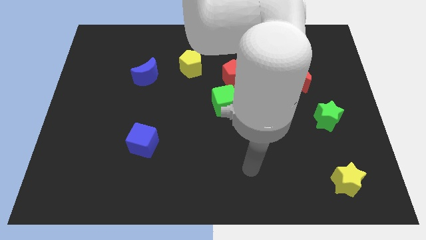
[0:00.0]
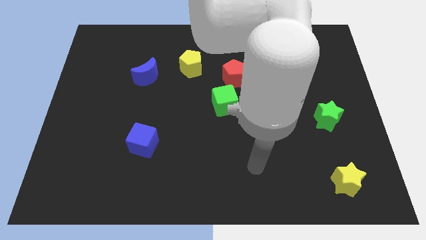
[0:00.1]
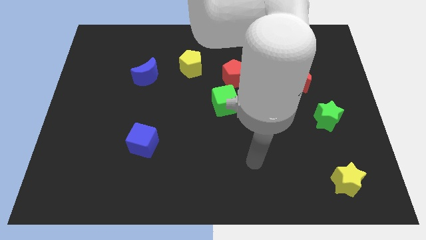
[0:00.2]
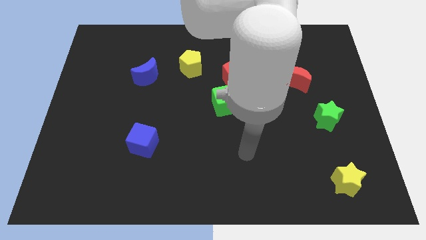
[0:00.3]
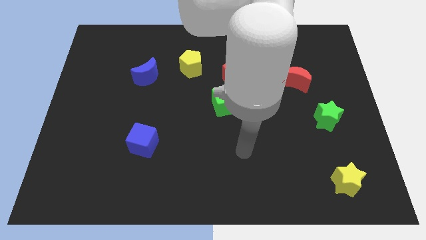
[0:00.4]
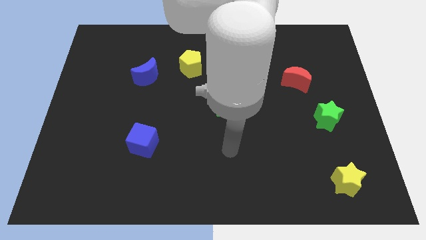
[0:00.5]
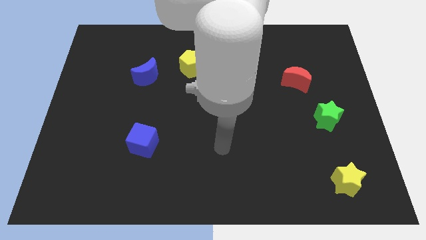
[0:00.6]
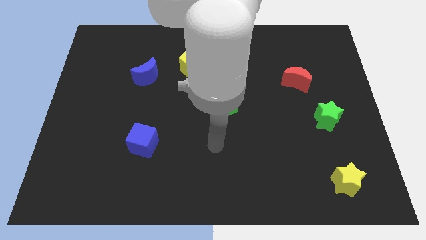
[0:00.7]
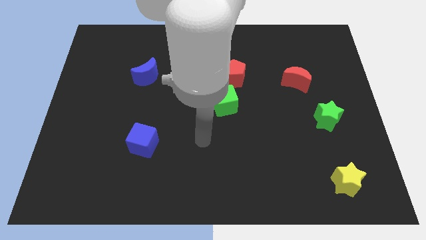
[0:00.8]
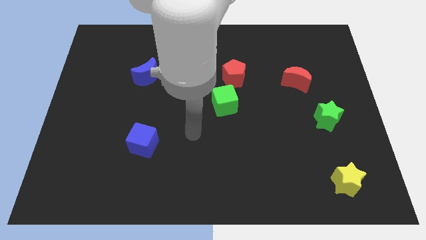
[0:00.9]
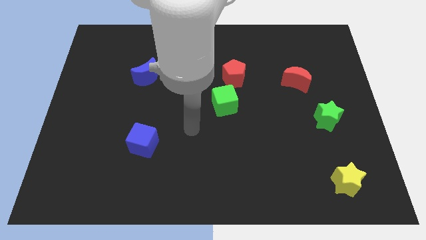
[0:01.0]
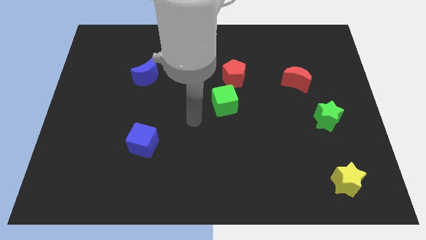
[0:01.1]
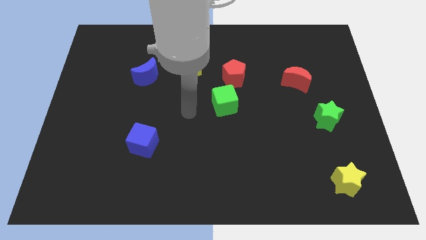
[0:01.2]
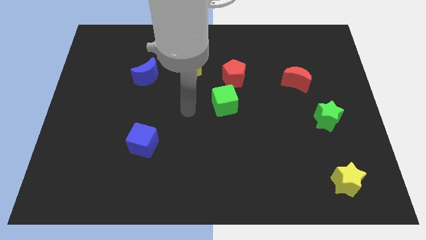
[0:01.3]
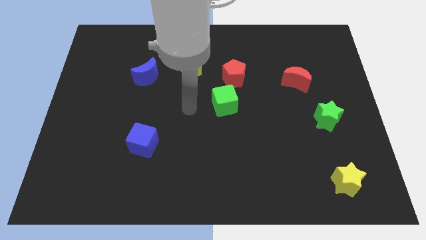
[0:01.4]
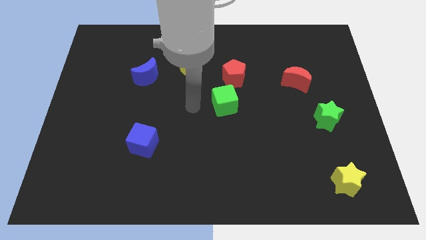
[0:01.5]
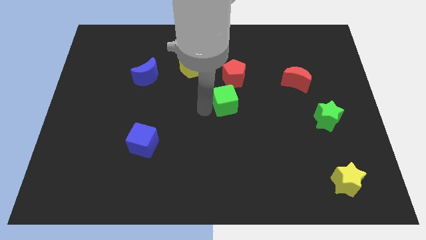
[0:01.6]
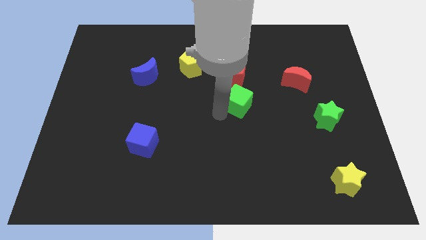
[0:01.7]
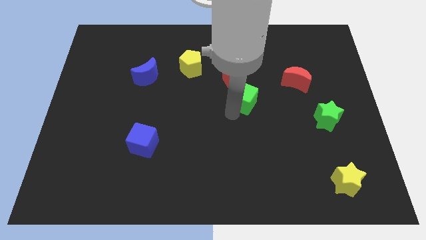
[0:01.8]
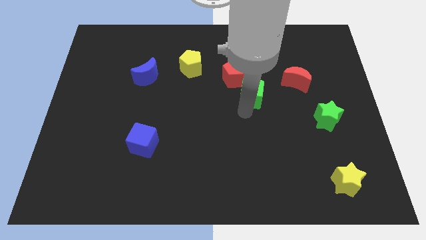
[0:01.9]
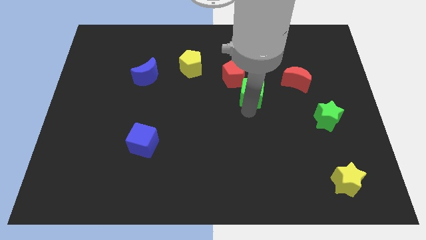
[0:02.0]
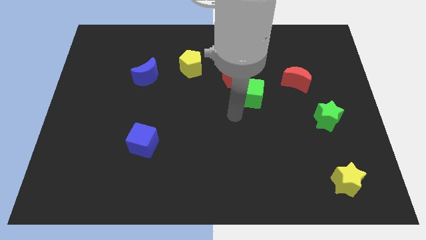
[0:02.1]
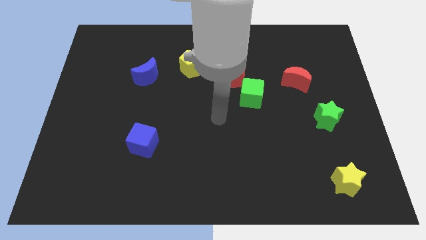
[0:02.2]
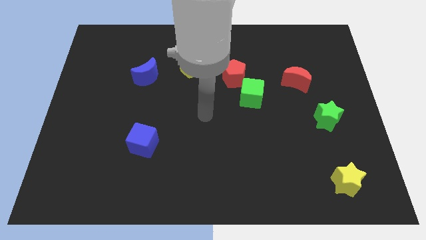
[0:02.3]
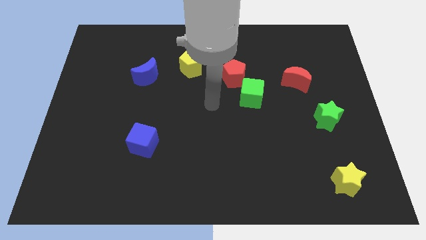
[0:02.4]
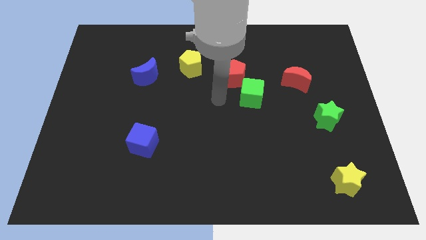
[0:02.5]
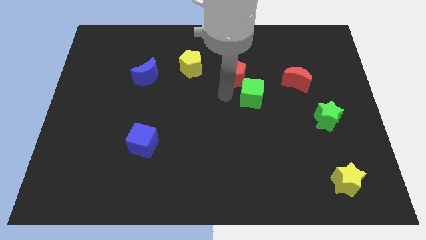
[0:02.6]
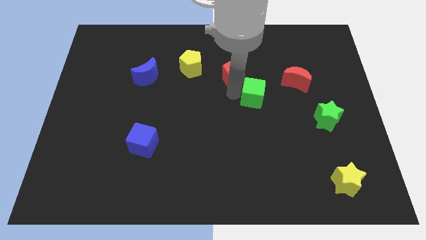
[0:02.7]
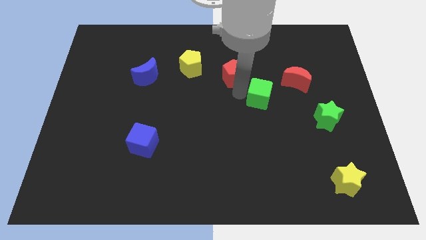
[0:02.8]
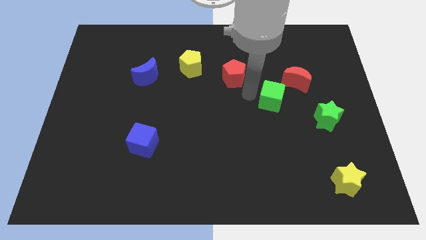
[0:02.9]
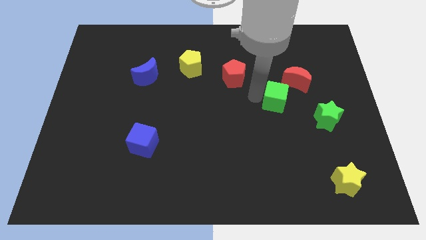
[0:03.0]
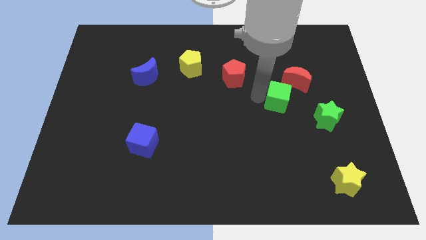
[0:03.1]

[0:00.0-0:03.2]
move the green cube slightly to the right

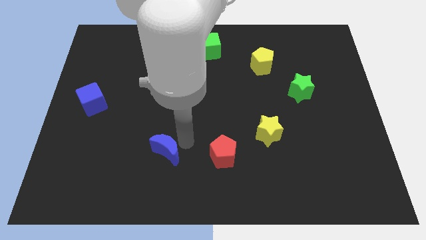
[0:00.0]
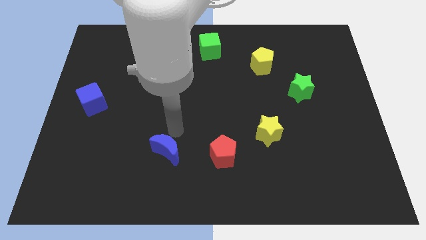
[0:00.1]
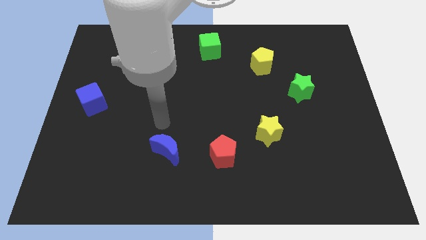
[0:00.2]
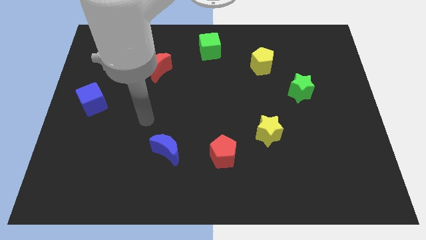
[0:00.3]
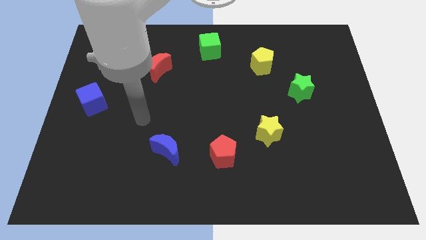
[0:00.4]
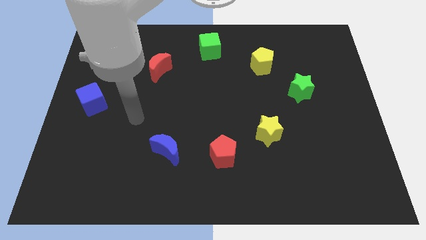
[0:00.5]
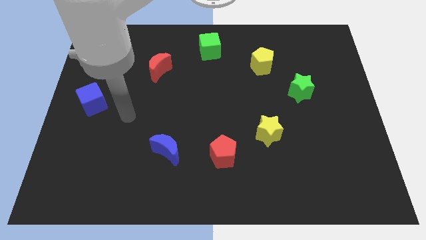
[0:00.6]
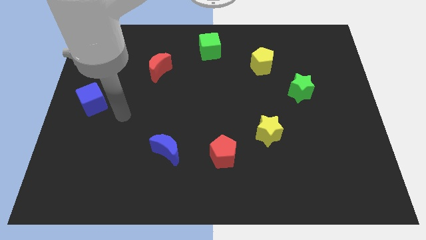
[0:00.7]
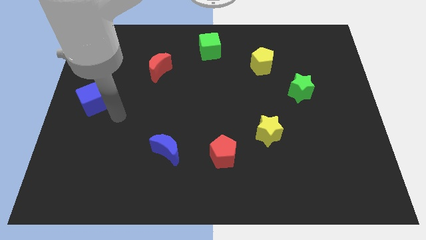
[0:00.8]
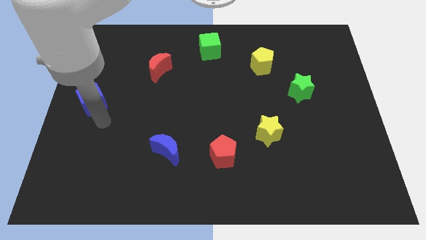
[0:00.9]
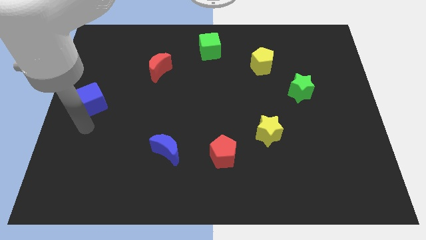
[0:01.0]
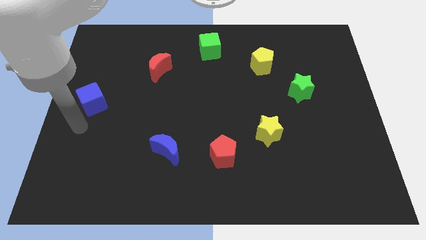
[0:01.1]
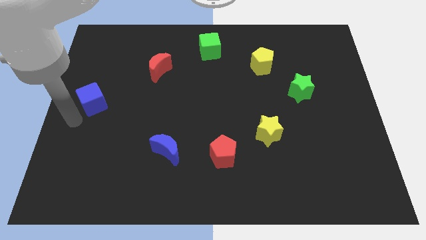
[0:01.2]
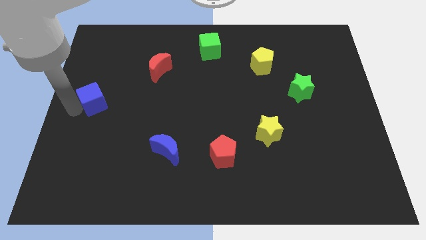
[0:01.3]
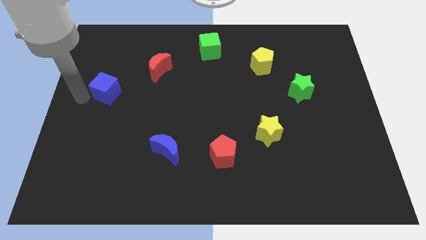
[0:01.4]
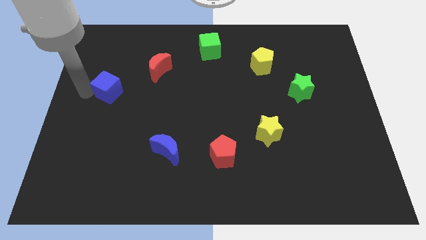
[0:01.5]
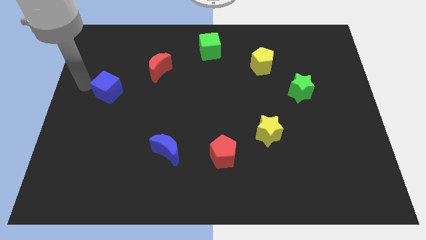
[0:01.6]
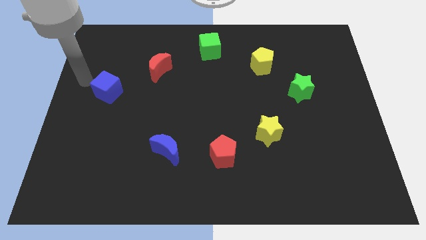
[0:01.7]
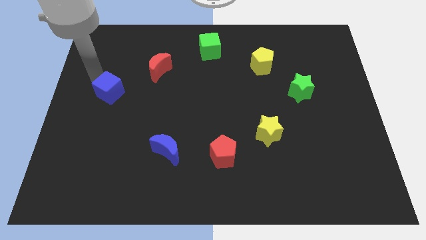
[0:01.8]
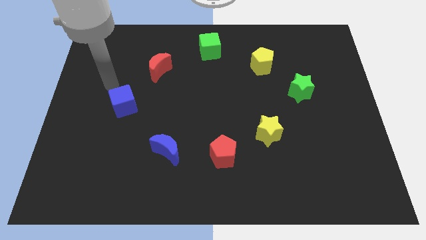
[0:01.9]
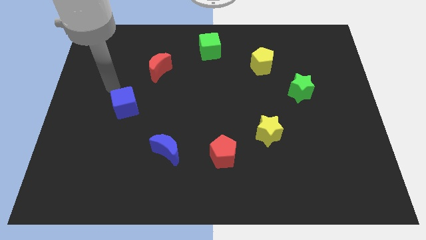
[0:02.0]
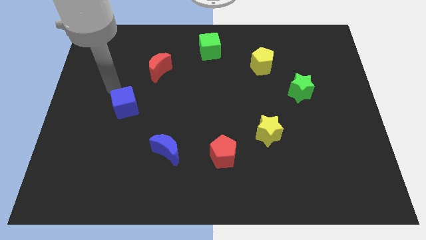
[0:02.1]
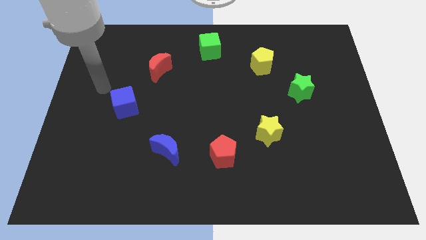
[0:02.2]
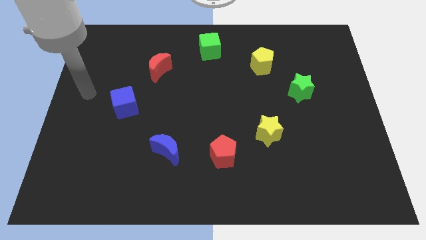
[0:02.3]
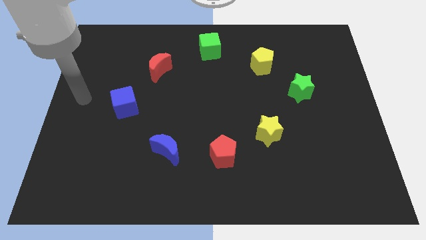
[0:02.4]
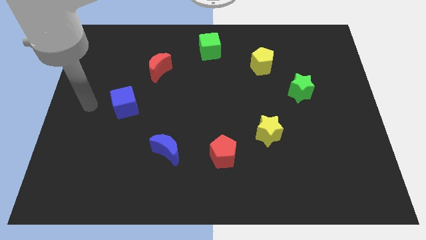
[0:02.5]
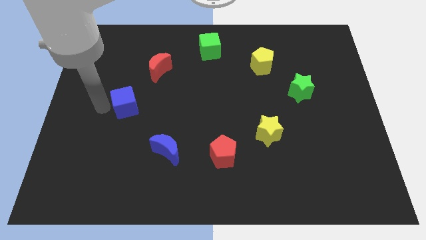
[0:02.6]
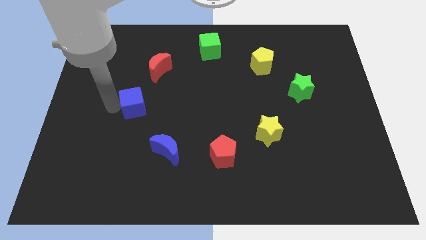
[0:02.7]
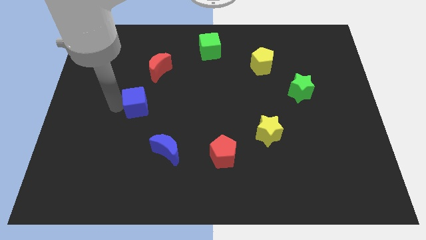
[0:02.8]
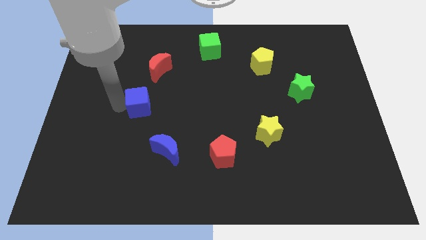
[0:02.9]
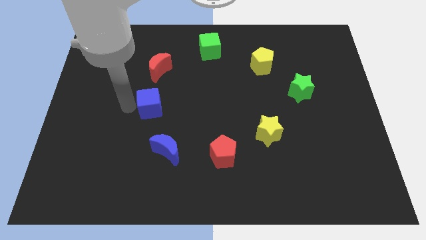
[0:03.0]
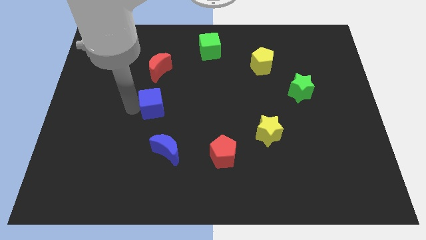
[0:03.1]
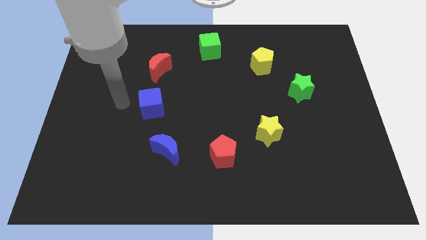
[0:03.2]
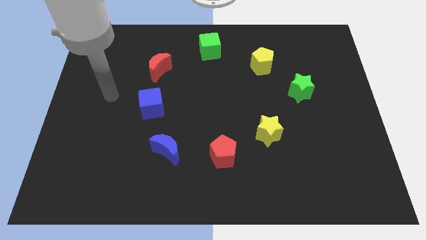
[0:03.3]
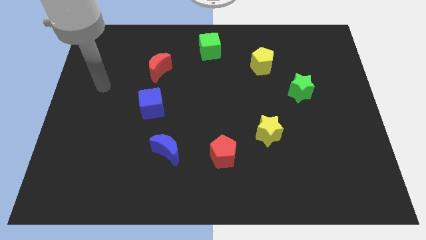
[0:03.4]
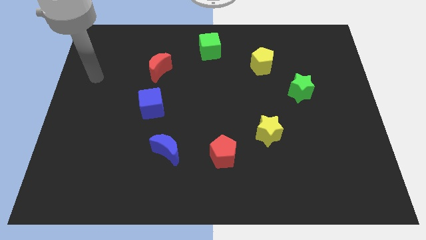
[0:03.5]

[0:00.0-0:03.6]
place the blue cube in between the red moon and blue moon

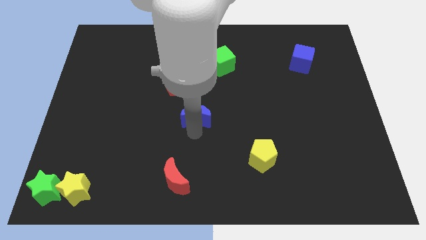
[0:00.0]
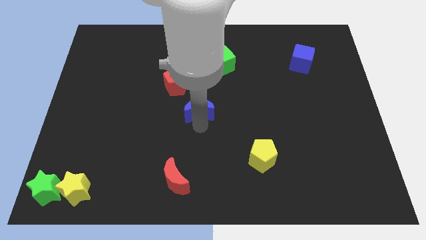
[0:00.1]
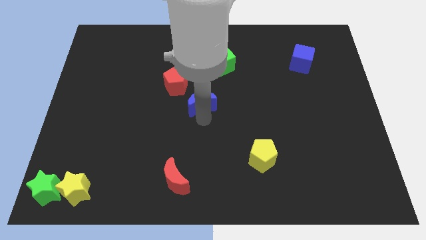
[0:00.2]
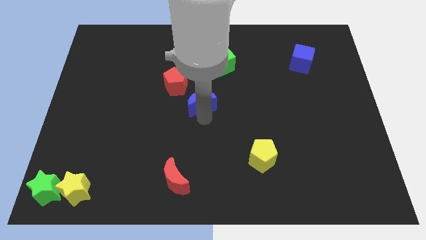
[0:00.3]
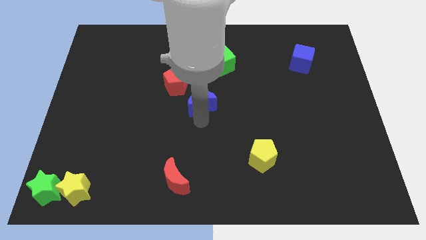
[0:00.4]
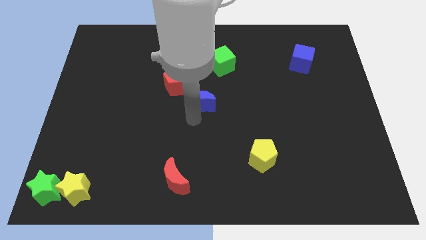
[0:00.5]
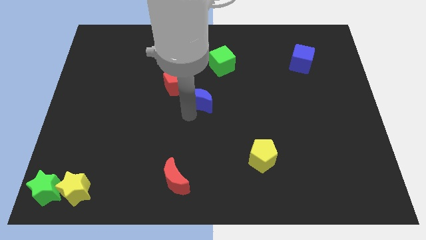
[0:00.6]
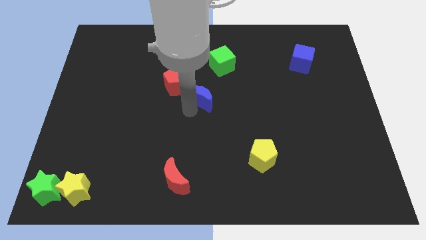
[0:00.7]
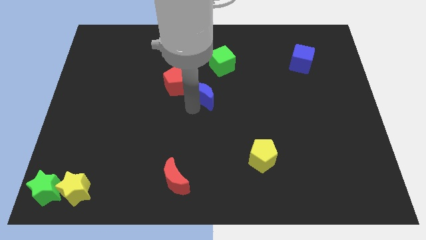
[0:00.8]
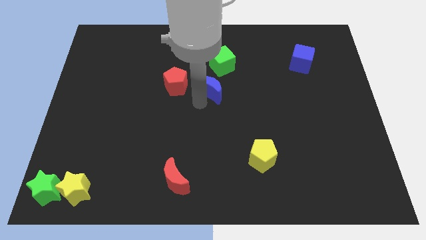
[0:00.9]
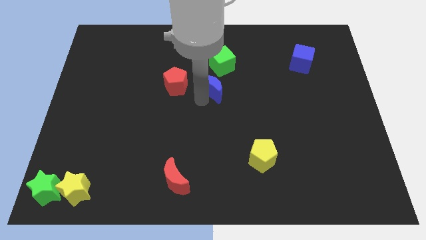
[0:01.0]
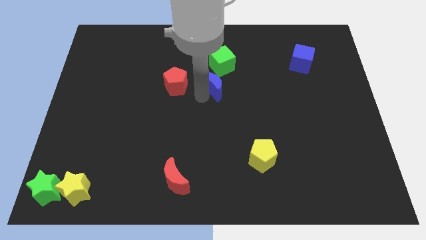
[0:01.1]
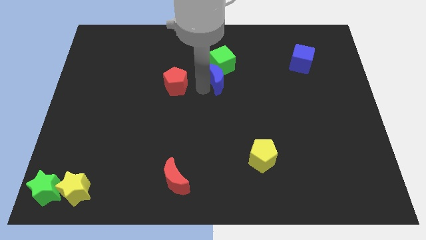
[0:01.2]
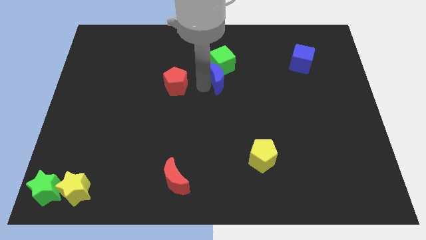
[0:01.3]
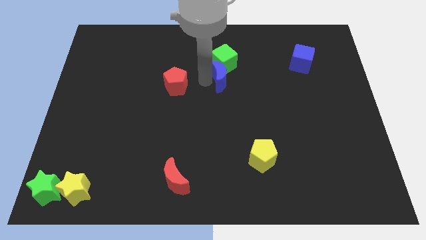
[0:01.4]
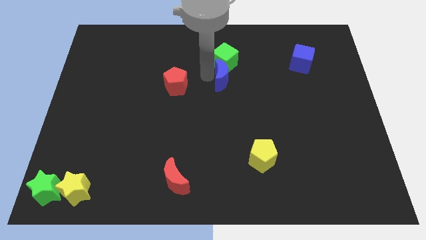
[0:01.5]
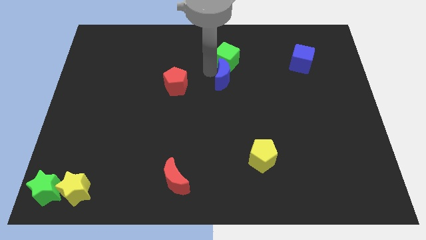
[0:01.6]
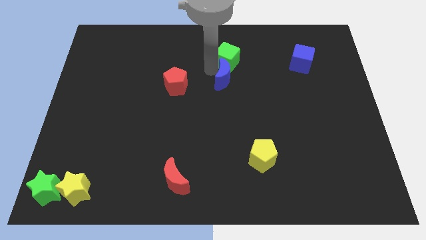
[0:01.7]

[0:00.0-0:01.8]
push the blue moon into the green cube

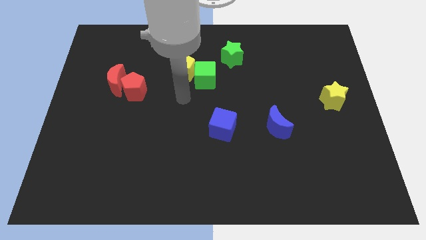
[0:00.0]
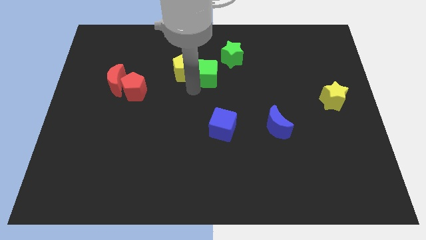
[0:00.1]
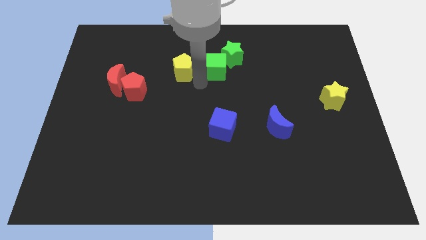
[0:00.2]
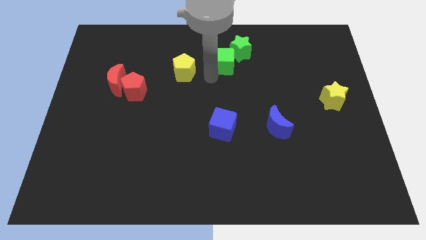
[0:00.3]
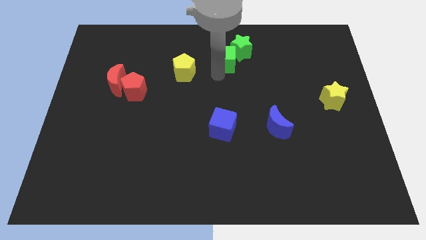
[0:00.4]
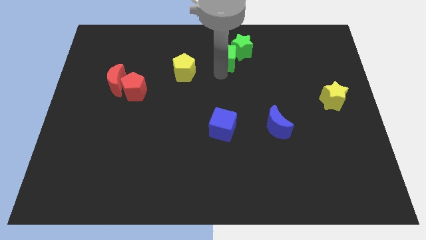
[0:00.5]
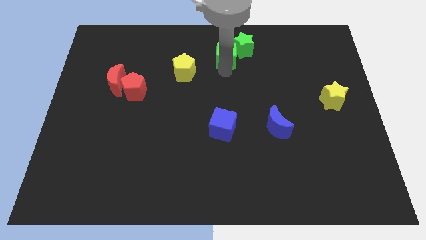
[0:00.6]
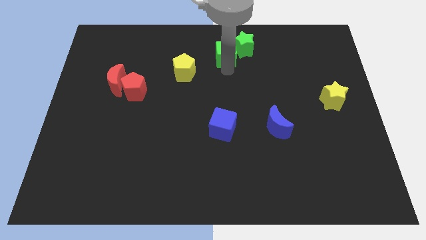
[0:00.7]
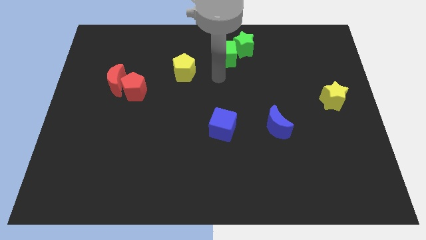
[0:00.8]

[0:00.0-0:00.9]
push green cube towards green star
